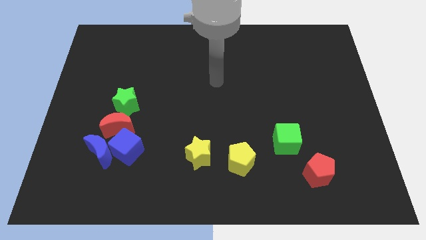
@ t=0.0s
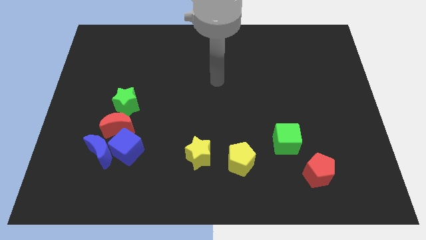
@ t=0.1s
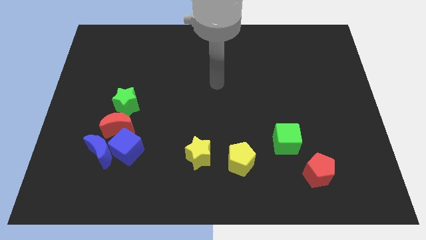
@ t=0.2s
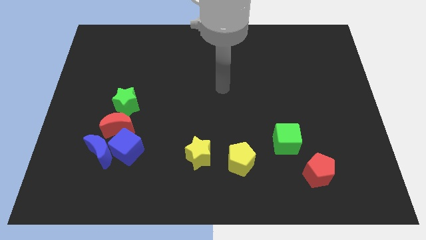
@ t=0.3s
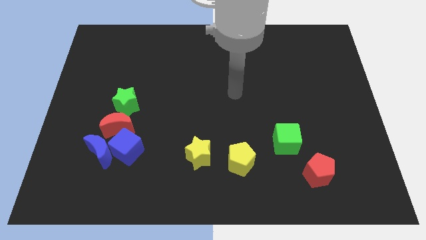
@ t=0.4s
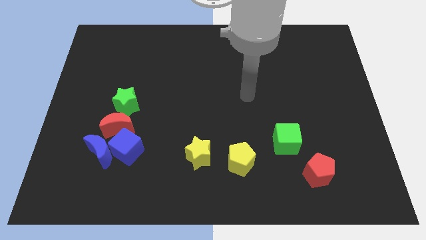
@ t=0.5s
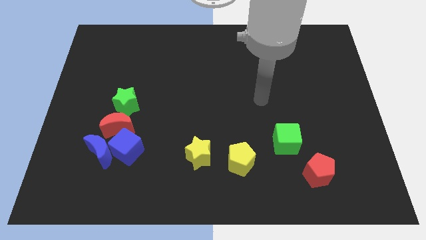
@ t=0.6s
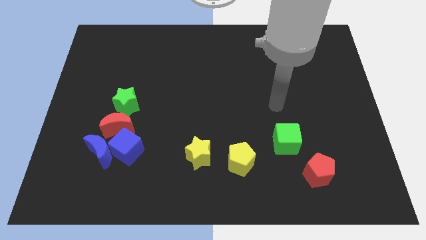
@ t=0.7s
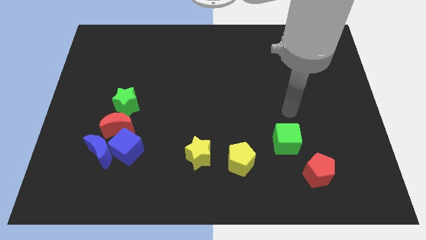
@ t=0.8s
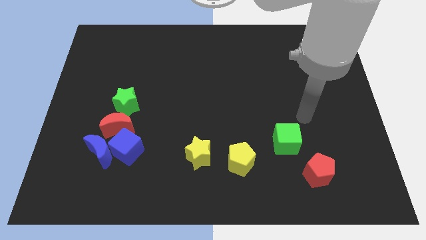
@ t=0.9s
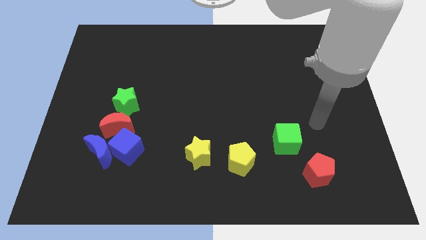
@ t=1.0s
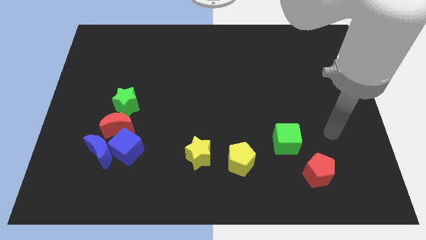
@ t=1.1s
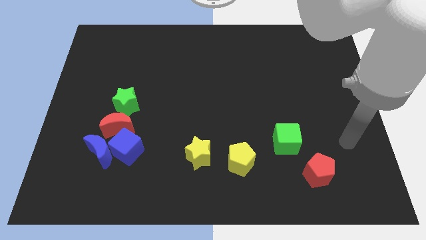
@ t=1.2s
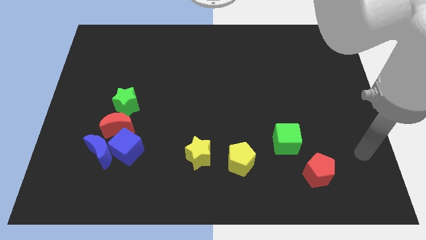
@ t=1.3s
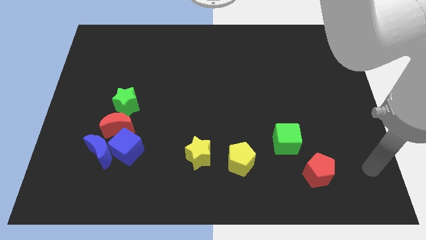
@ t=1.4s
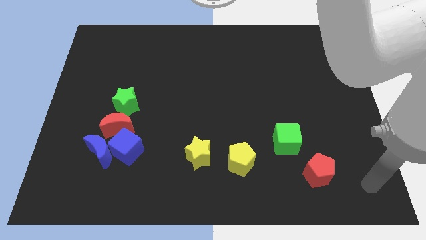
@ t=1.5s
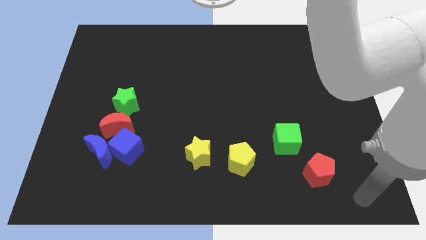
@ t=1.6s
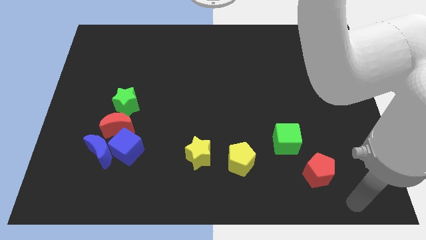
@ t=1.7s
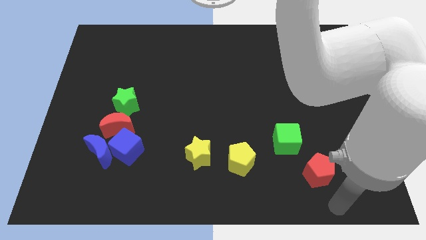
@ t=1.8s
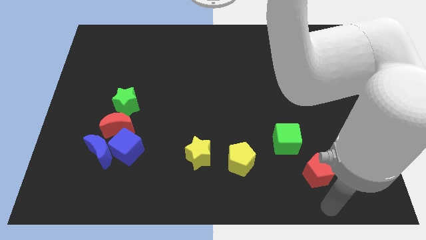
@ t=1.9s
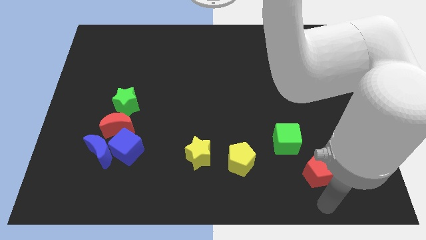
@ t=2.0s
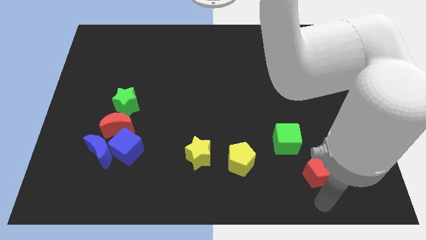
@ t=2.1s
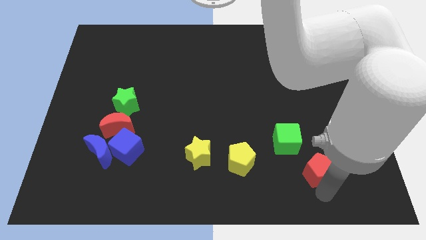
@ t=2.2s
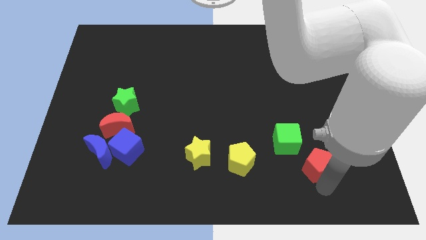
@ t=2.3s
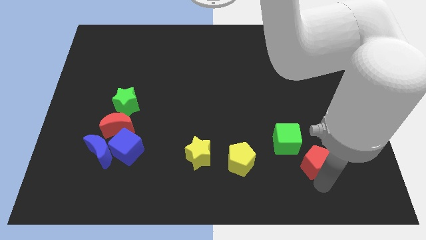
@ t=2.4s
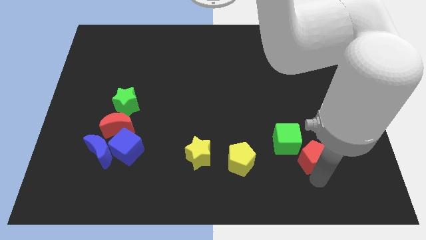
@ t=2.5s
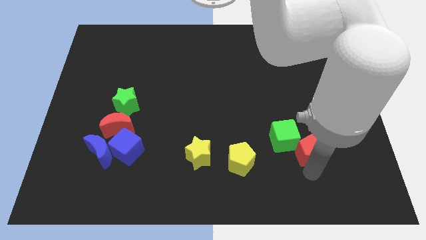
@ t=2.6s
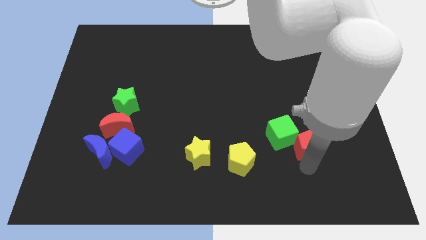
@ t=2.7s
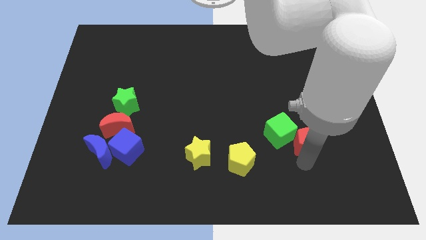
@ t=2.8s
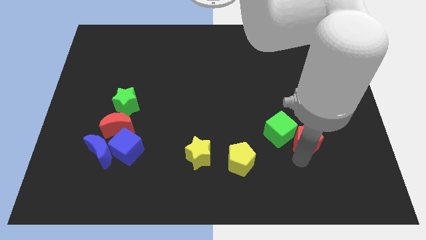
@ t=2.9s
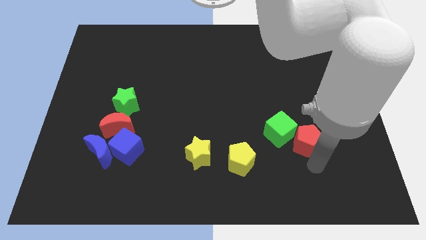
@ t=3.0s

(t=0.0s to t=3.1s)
move the red pentagon into the green cube

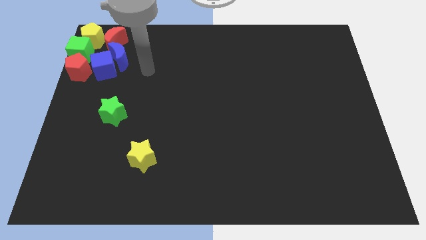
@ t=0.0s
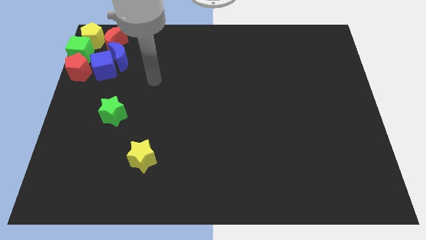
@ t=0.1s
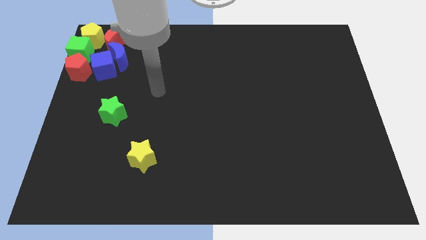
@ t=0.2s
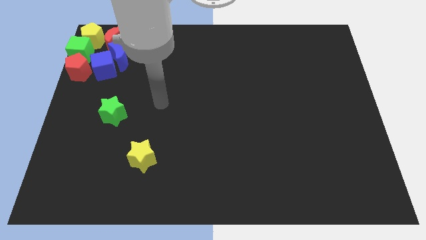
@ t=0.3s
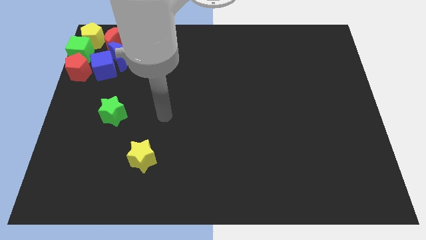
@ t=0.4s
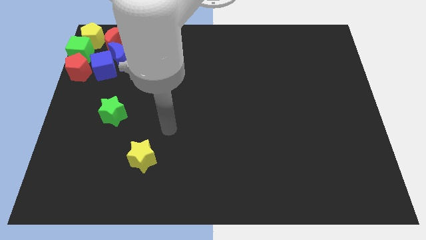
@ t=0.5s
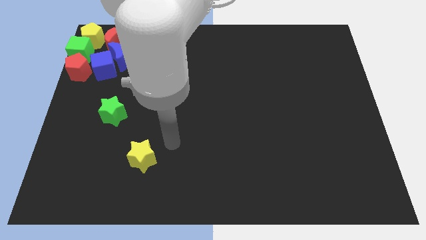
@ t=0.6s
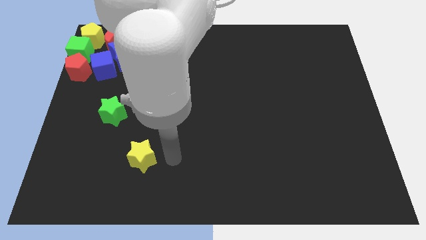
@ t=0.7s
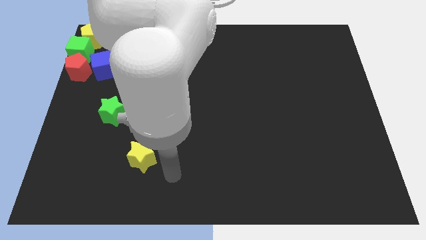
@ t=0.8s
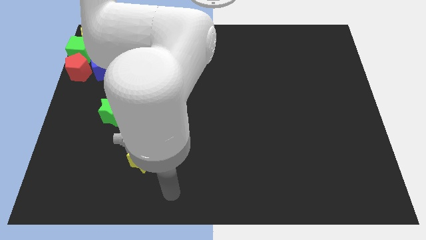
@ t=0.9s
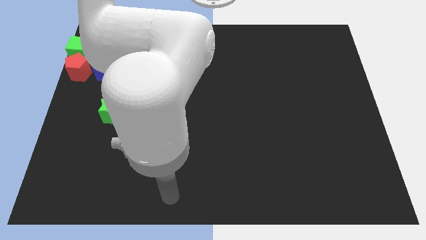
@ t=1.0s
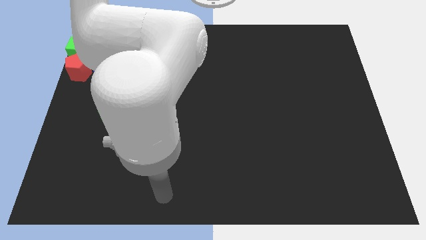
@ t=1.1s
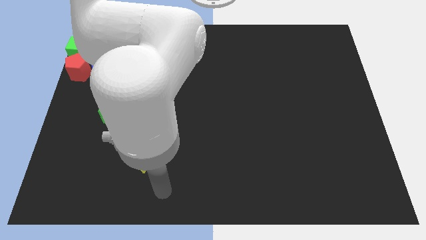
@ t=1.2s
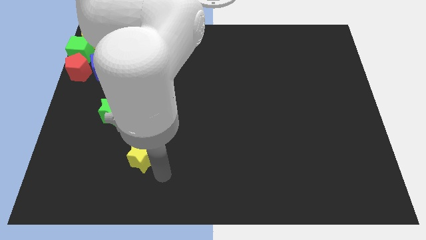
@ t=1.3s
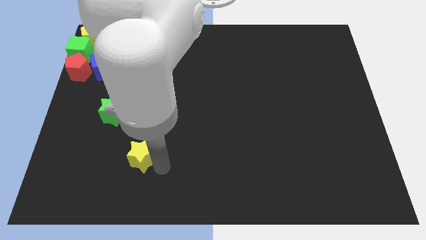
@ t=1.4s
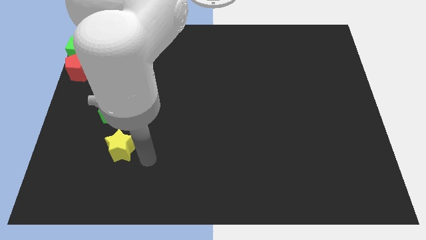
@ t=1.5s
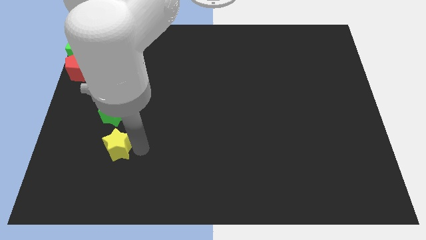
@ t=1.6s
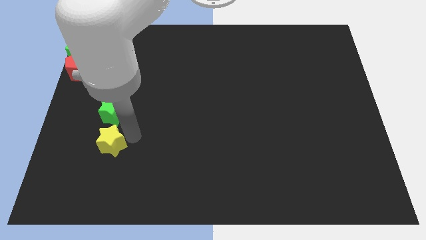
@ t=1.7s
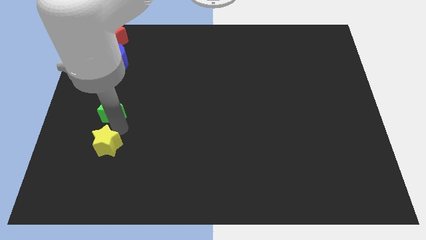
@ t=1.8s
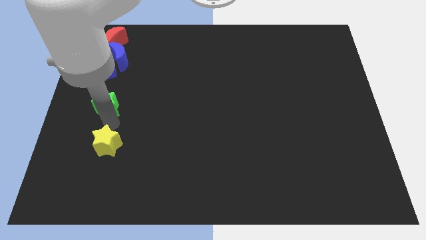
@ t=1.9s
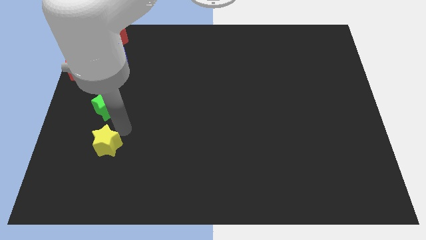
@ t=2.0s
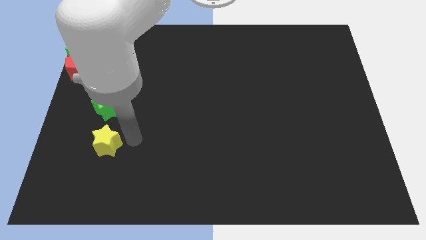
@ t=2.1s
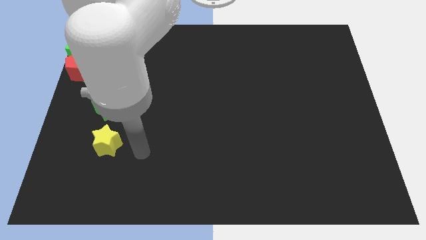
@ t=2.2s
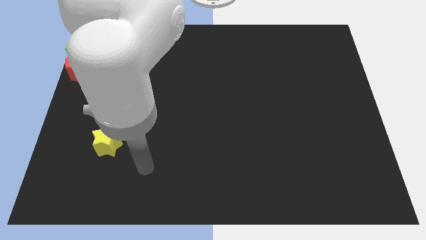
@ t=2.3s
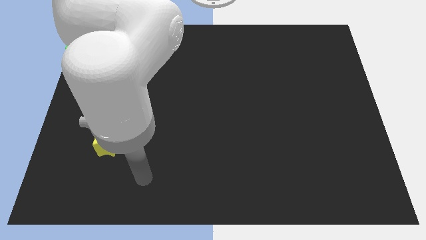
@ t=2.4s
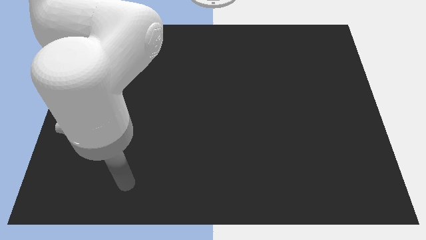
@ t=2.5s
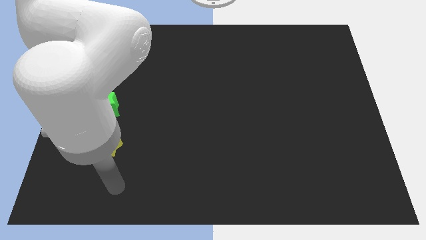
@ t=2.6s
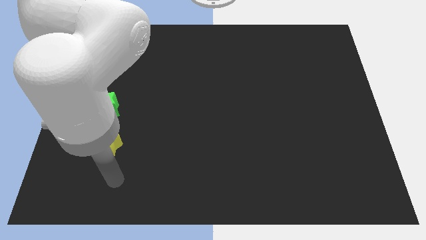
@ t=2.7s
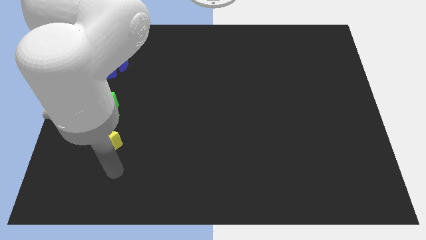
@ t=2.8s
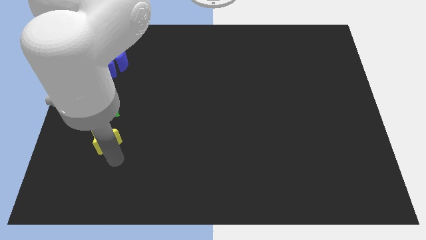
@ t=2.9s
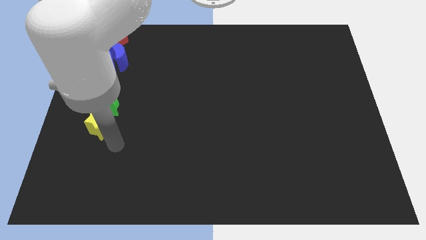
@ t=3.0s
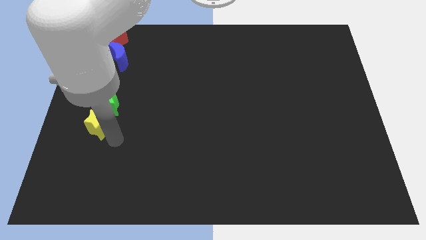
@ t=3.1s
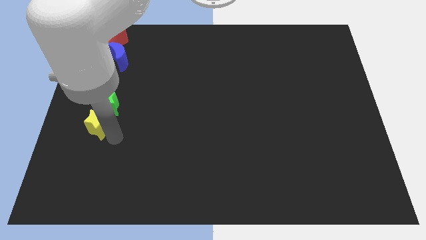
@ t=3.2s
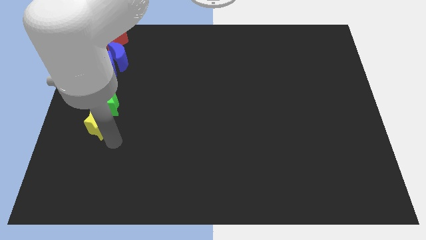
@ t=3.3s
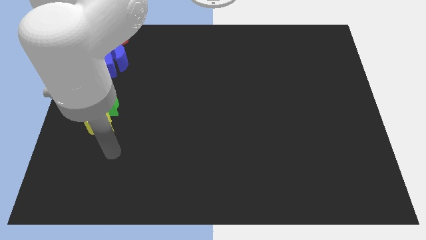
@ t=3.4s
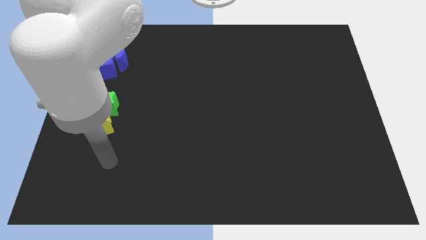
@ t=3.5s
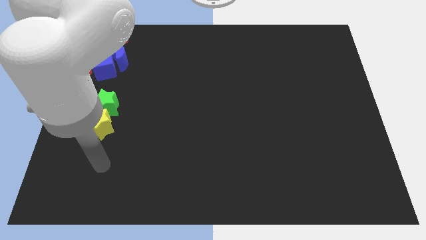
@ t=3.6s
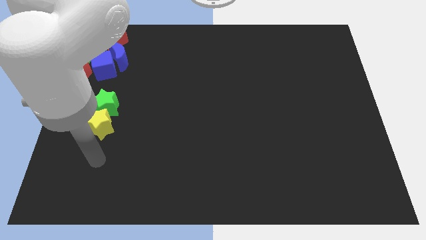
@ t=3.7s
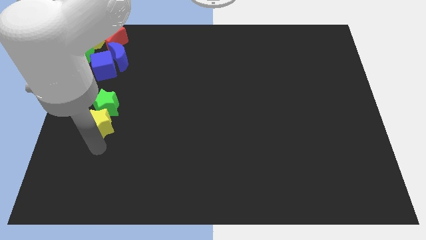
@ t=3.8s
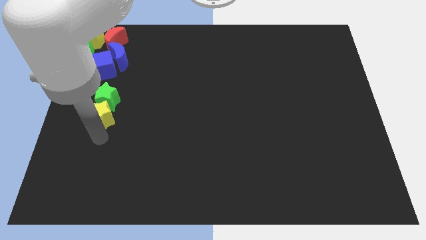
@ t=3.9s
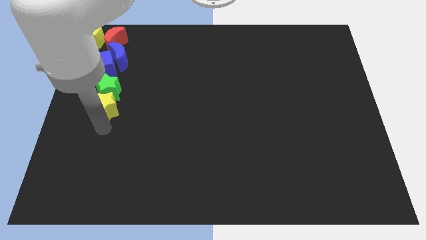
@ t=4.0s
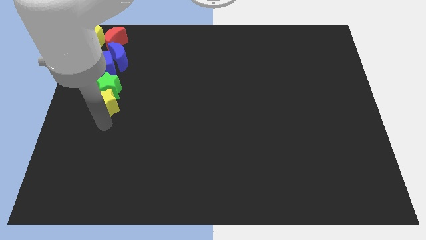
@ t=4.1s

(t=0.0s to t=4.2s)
push the stars to the top left of the board

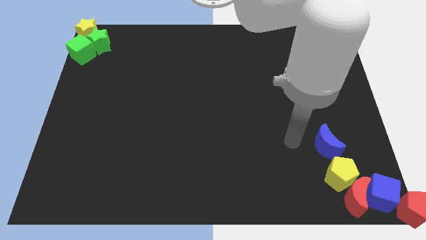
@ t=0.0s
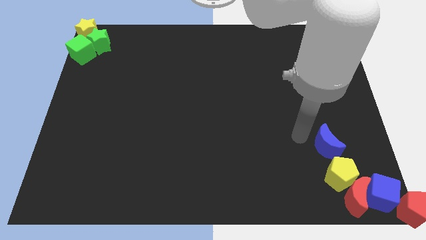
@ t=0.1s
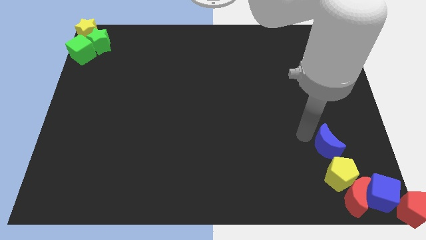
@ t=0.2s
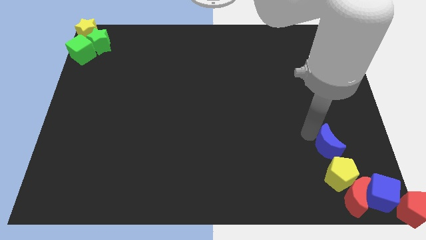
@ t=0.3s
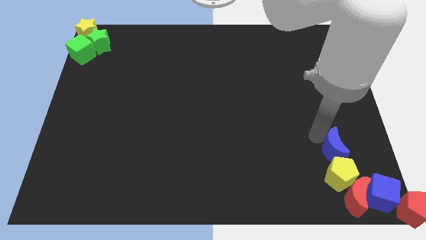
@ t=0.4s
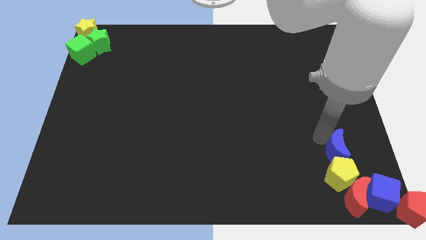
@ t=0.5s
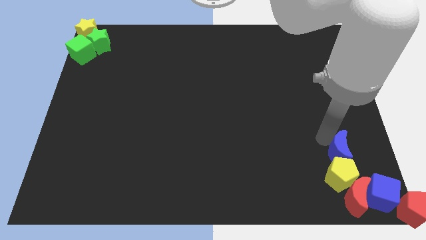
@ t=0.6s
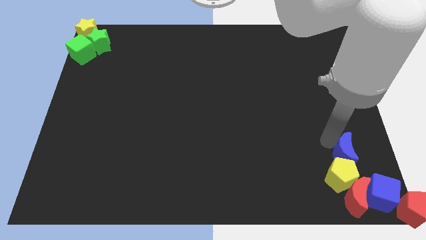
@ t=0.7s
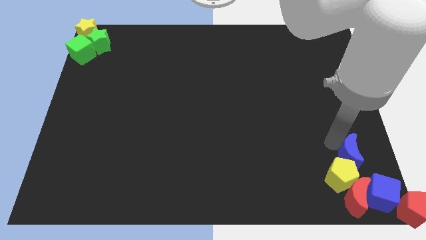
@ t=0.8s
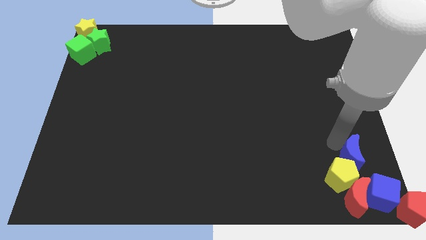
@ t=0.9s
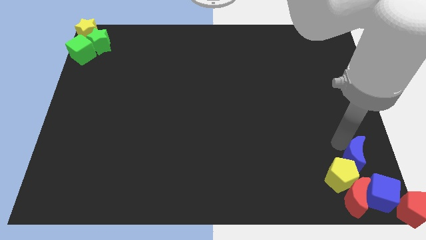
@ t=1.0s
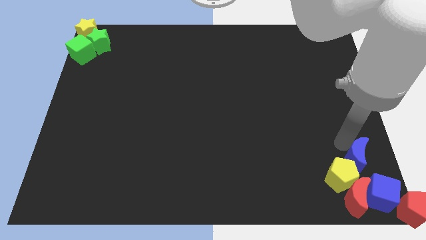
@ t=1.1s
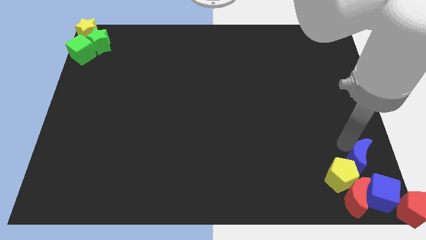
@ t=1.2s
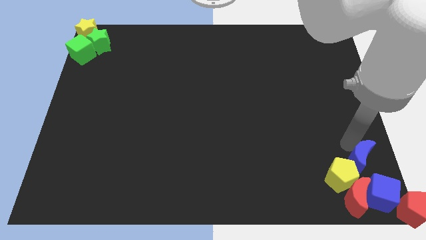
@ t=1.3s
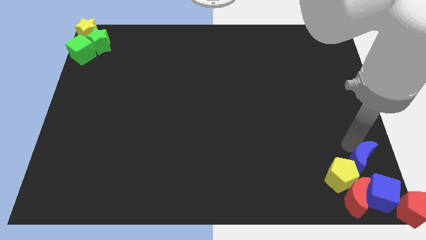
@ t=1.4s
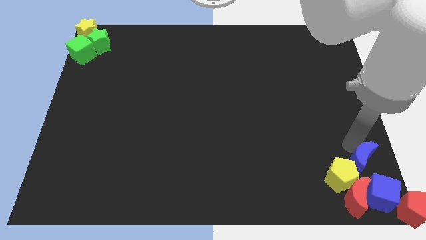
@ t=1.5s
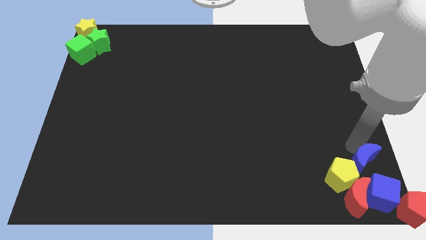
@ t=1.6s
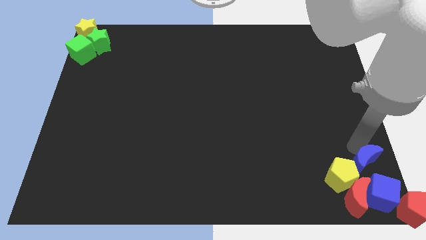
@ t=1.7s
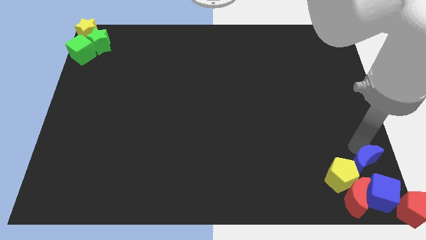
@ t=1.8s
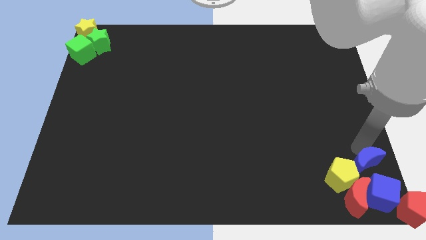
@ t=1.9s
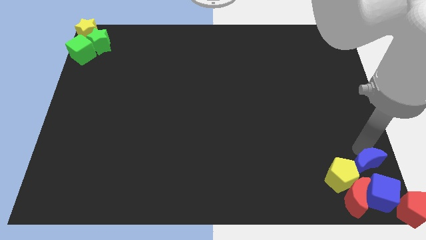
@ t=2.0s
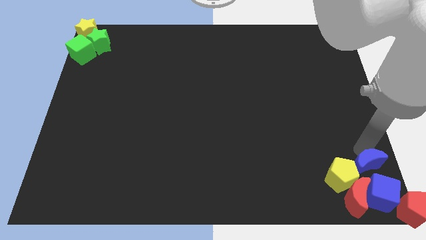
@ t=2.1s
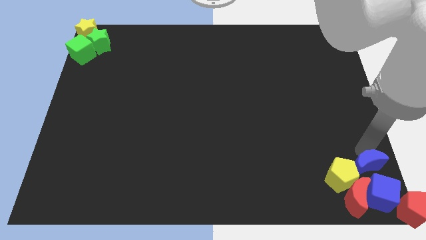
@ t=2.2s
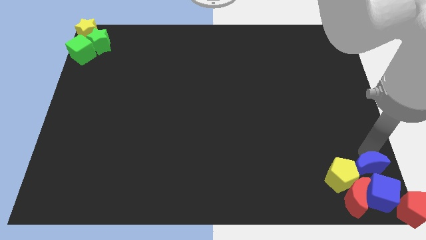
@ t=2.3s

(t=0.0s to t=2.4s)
place the blue crescent at the top of the blue cube
